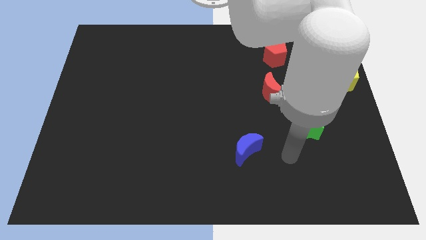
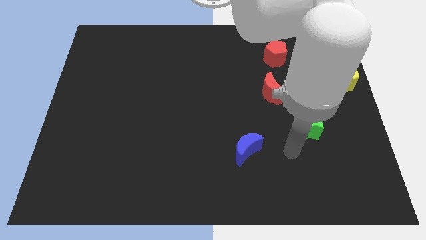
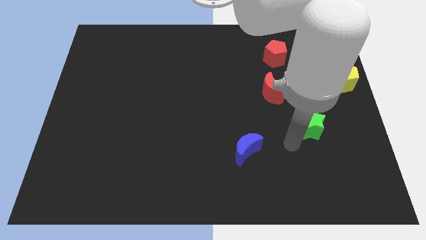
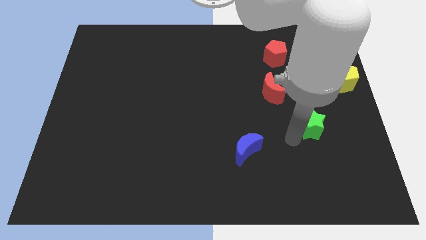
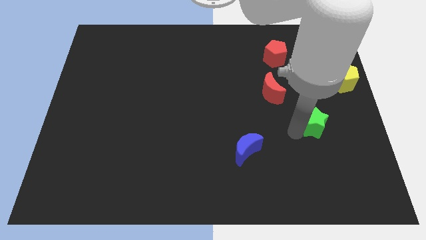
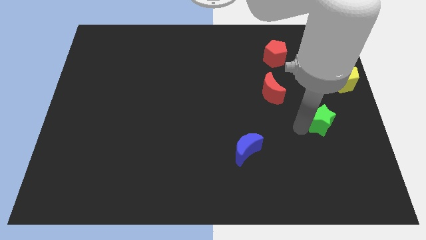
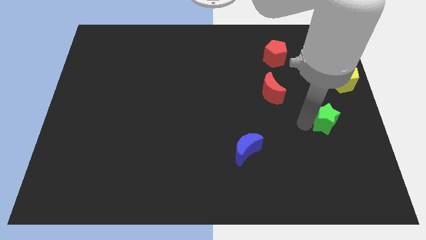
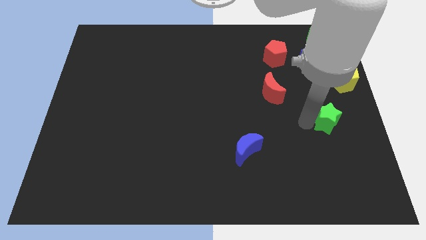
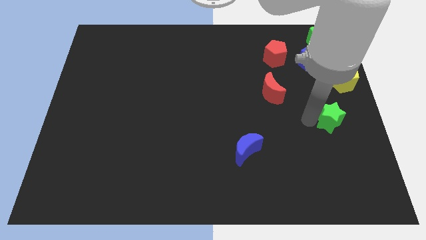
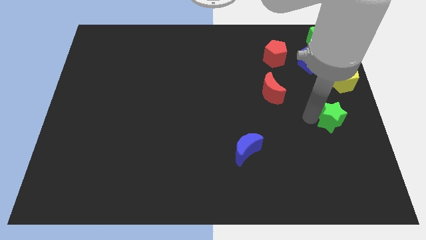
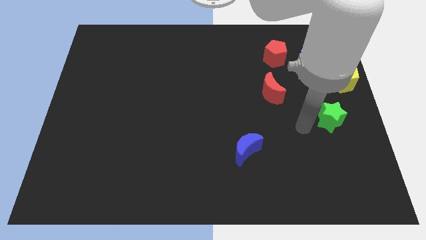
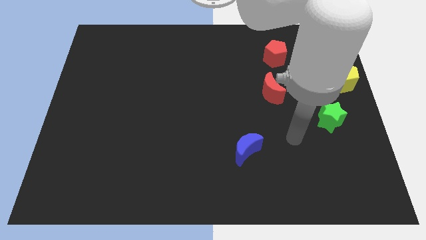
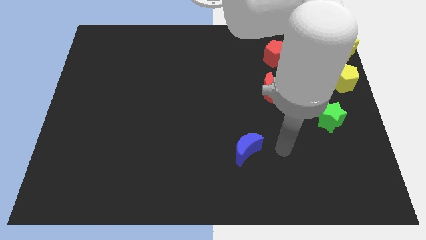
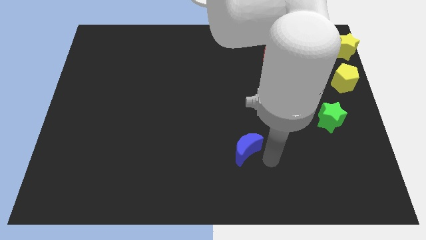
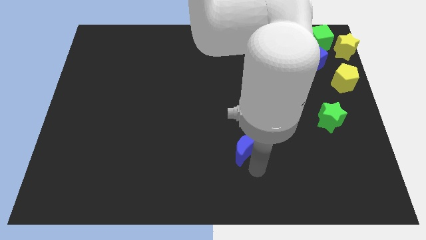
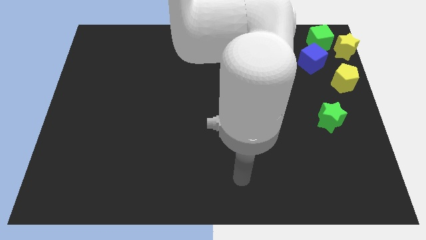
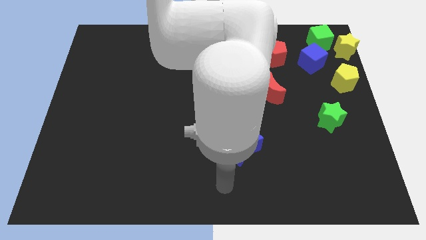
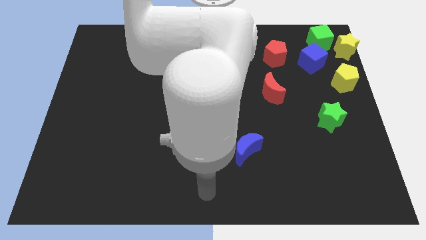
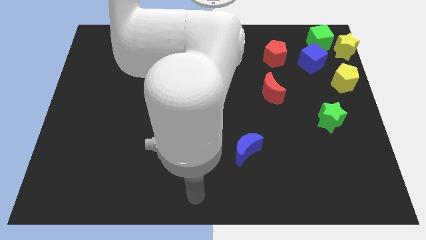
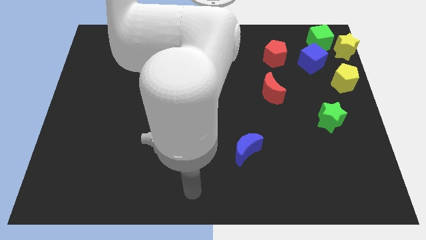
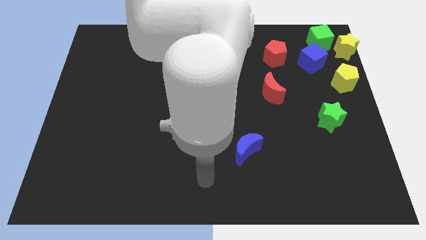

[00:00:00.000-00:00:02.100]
push the green star close to the yellow pentagon

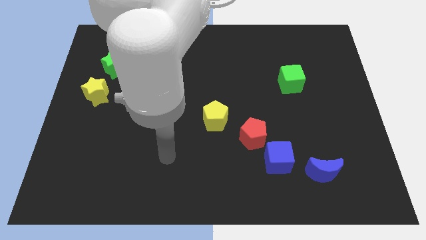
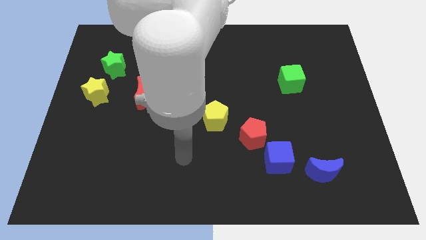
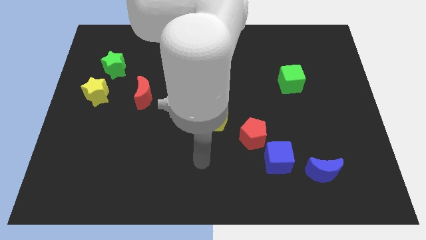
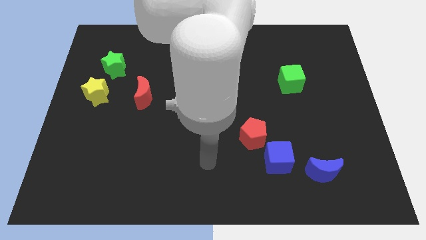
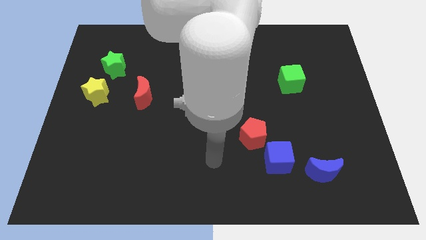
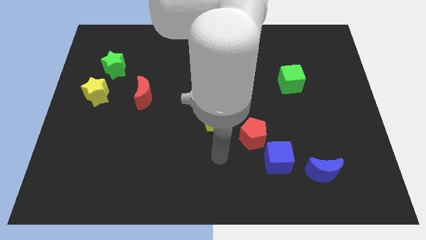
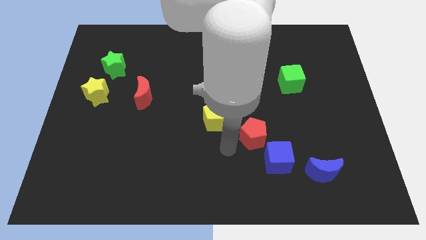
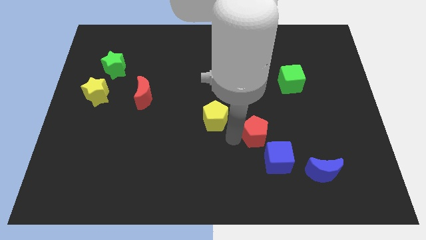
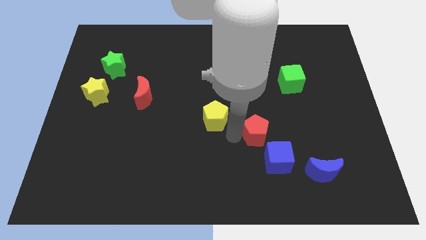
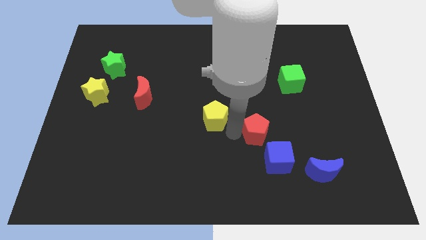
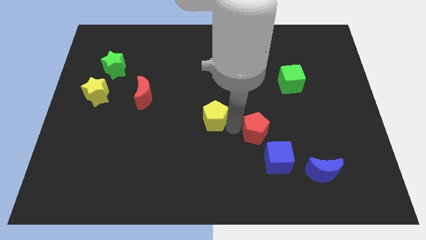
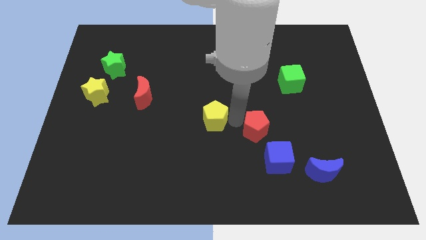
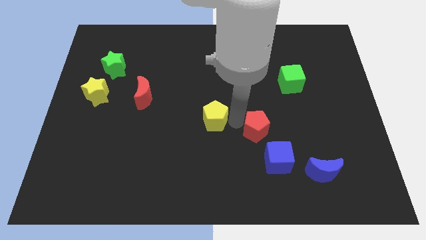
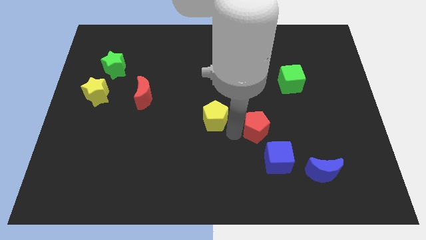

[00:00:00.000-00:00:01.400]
point your arm between red pentagon and yellow pentagon

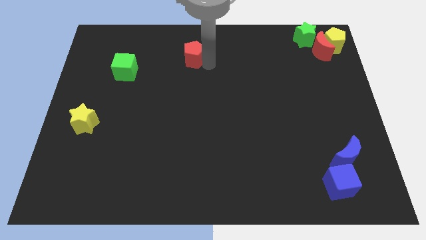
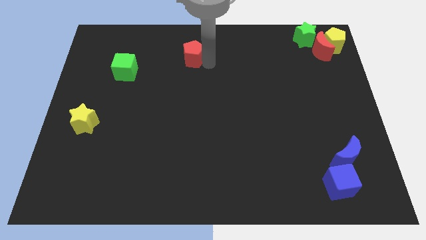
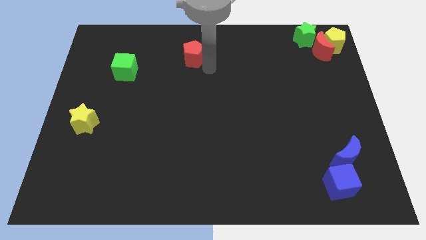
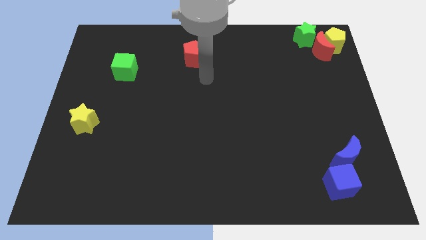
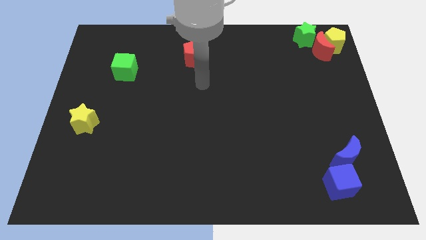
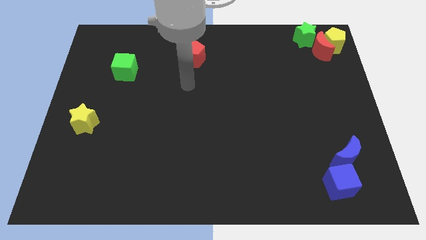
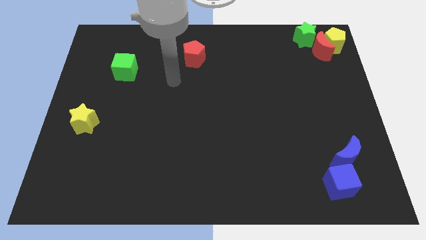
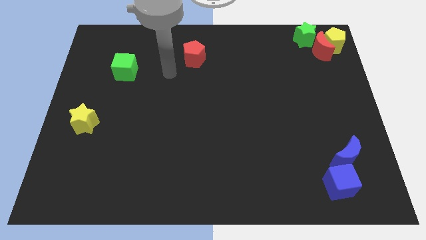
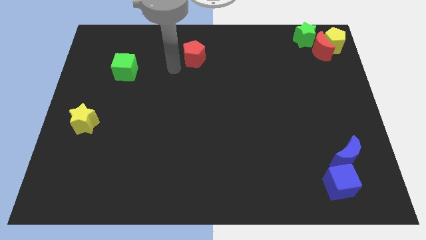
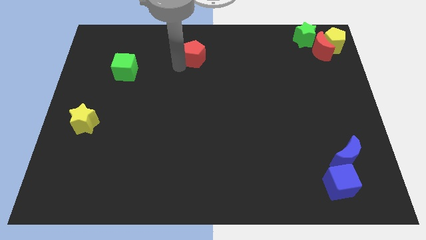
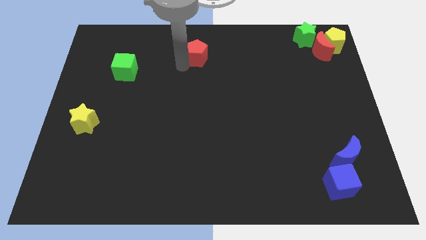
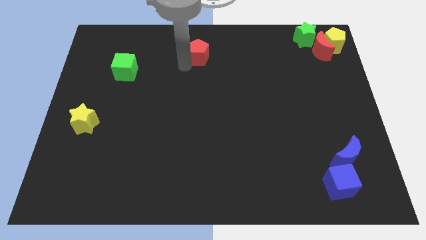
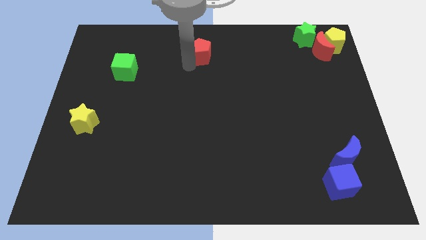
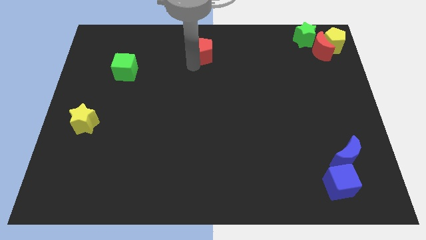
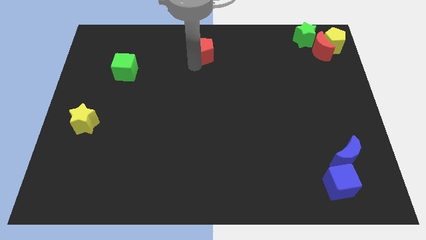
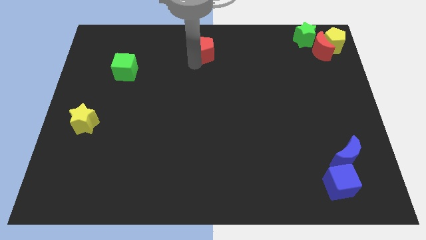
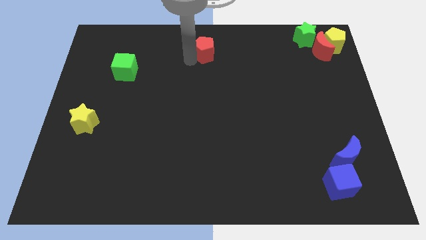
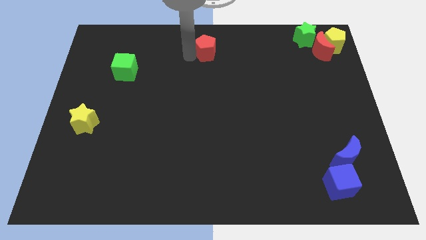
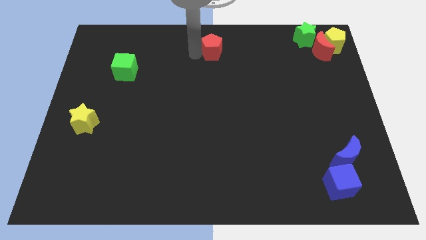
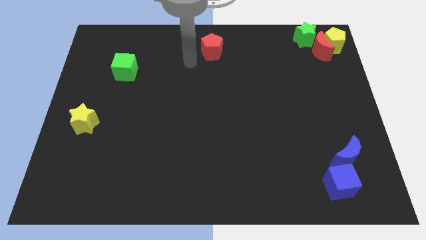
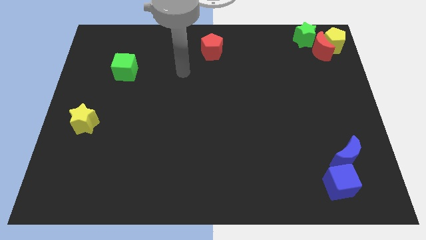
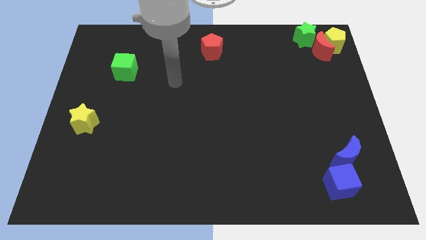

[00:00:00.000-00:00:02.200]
place the red pentagon at top center of the board

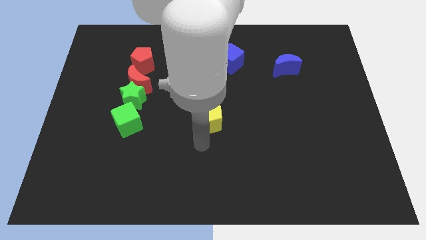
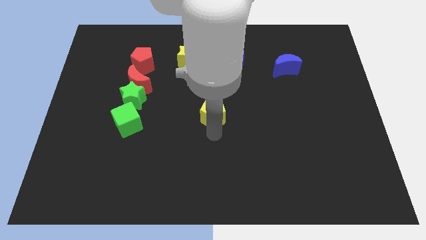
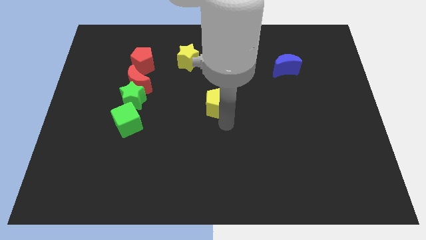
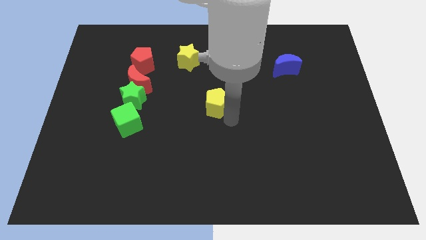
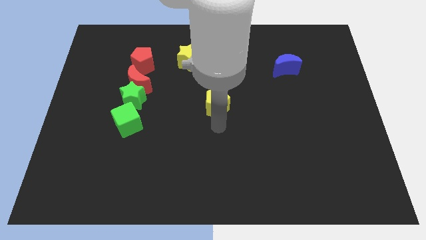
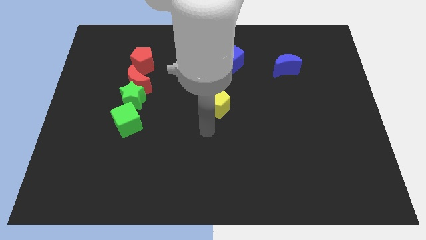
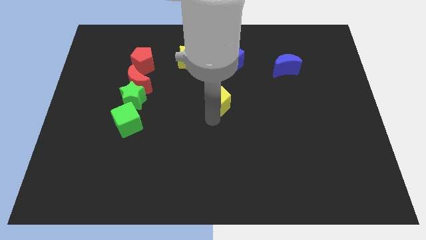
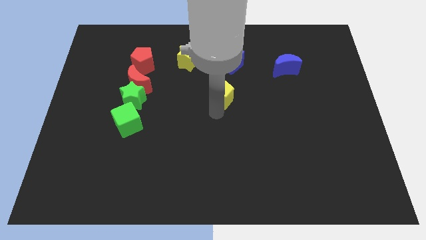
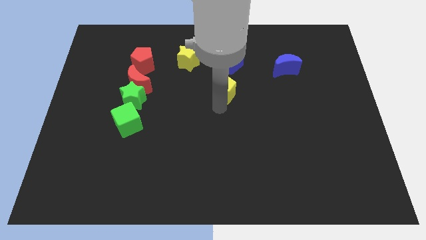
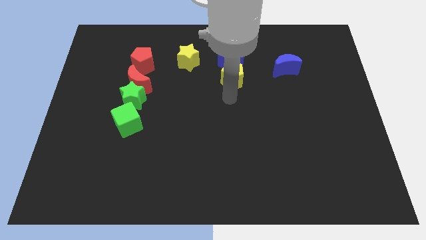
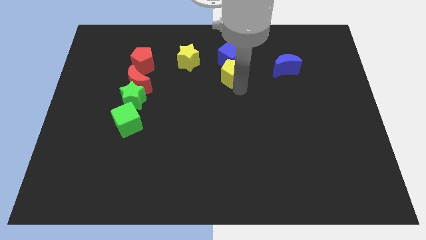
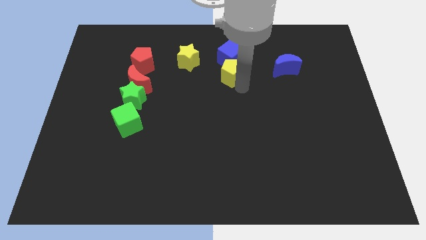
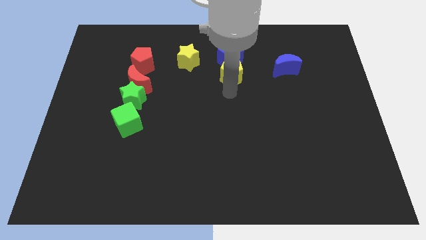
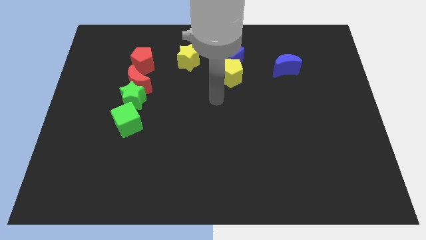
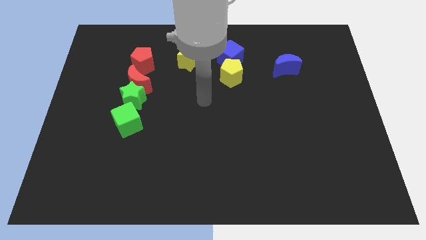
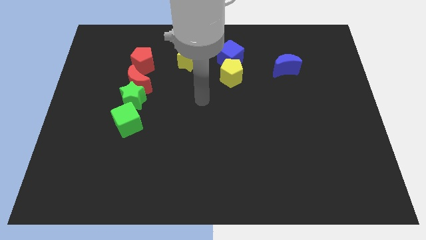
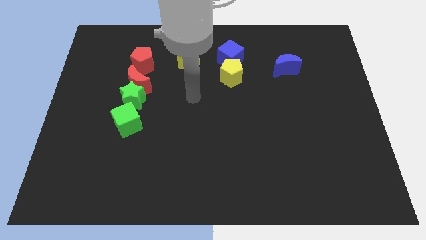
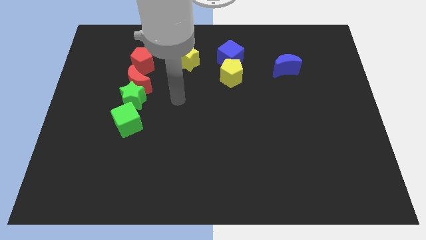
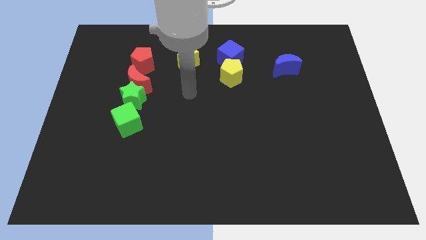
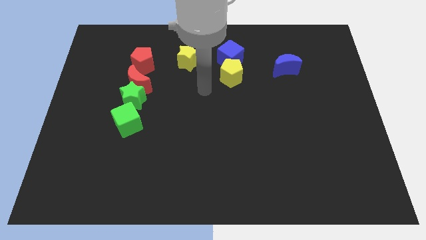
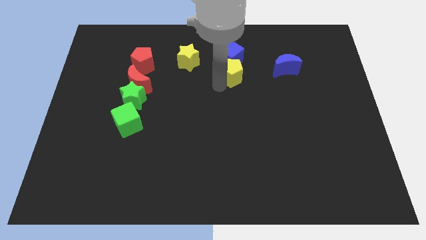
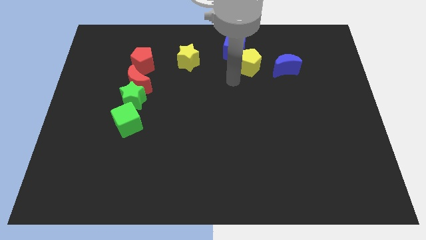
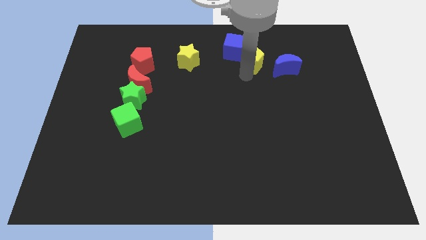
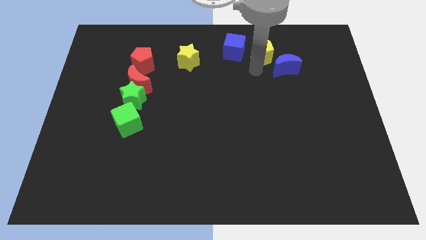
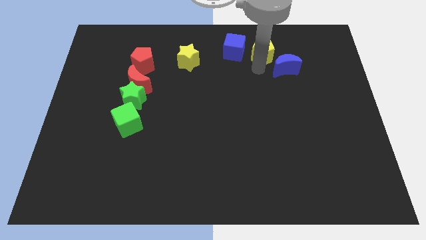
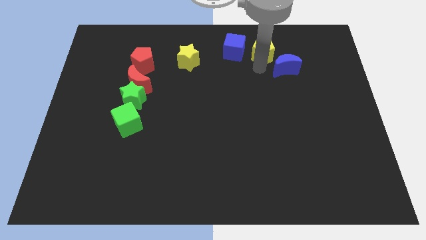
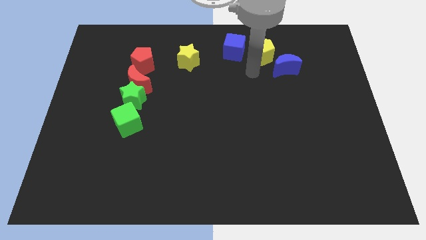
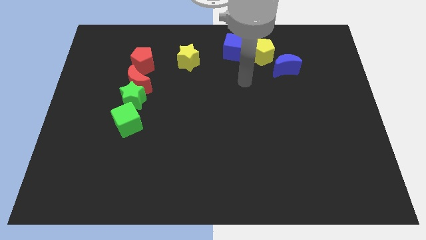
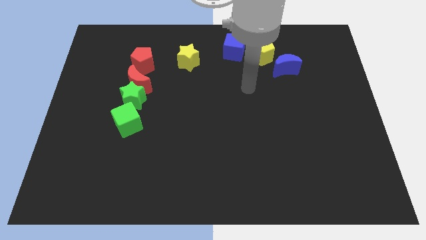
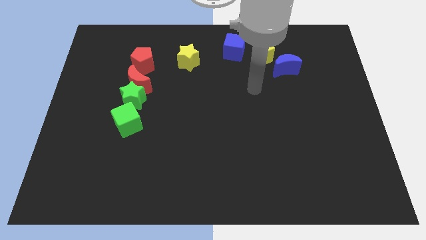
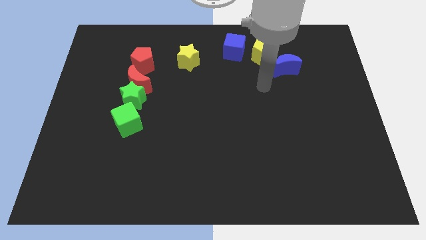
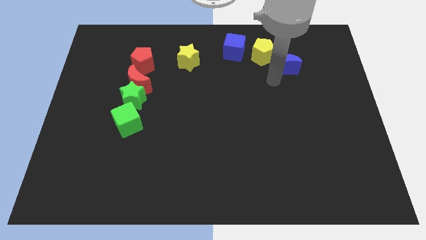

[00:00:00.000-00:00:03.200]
slide the yellow pentagon to the right side of the blue cube
